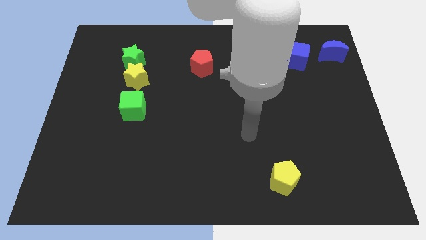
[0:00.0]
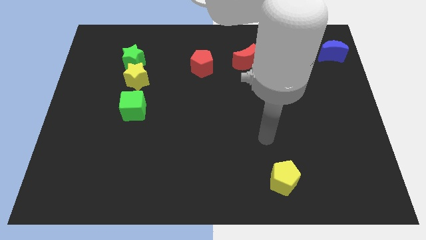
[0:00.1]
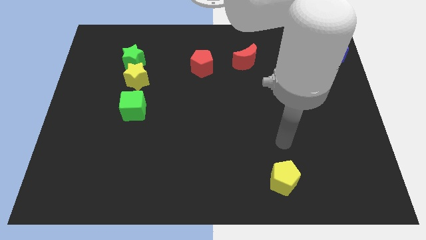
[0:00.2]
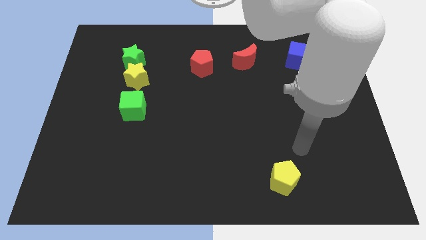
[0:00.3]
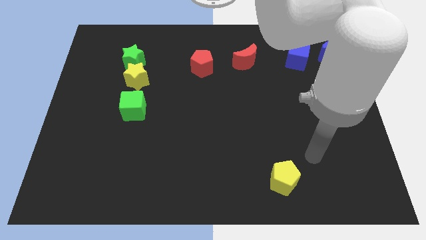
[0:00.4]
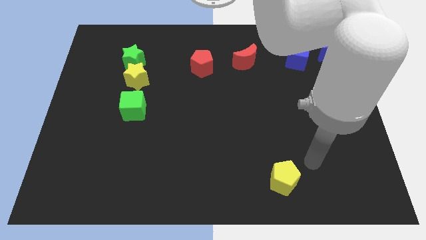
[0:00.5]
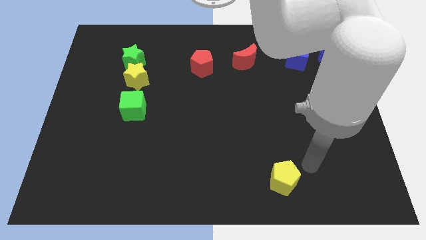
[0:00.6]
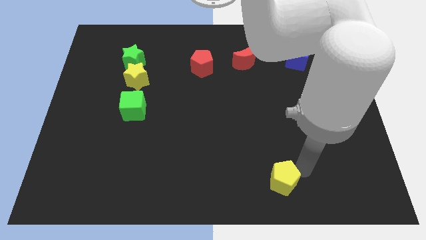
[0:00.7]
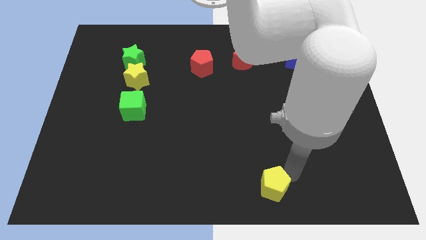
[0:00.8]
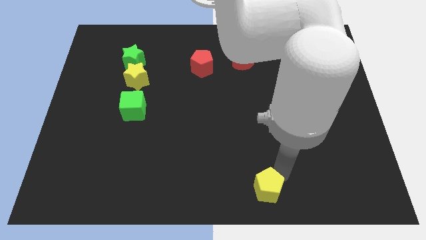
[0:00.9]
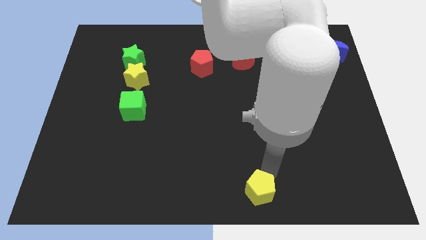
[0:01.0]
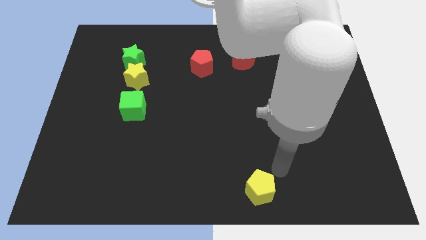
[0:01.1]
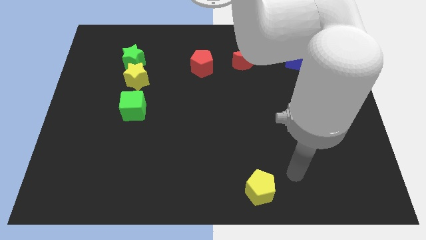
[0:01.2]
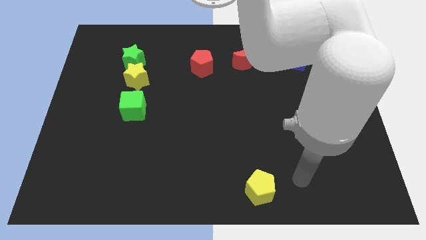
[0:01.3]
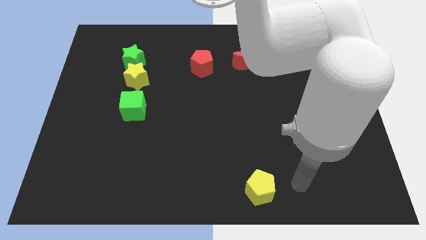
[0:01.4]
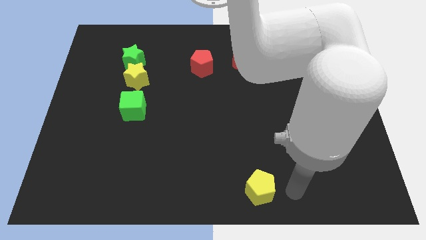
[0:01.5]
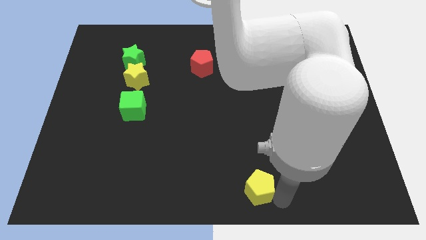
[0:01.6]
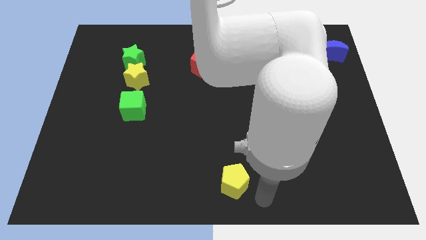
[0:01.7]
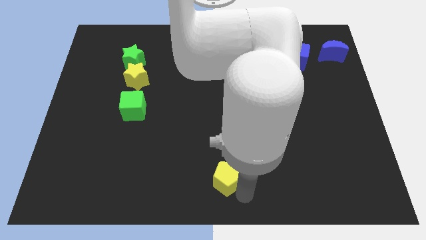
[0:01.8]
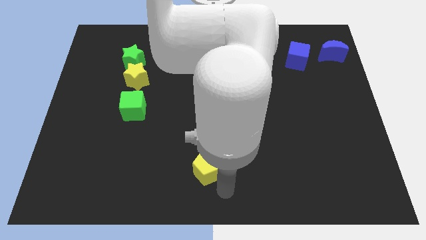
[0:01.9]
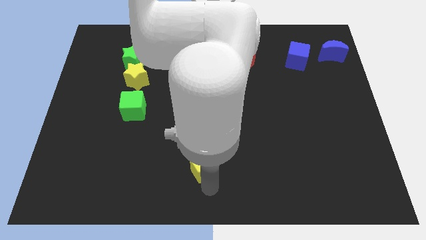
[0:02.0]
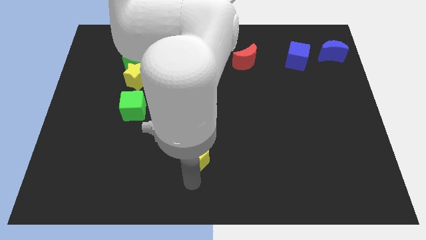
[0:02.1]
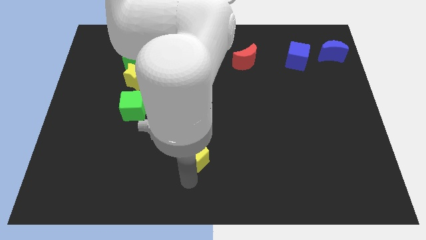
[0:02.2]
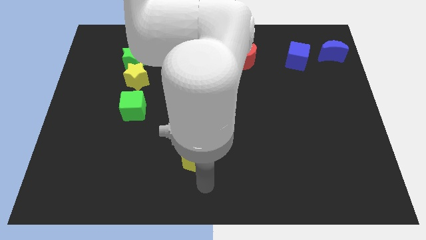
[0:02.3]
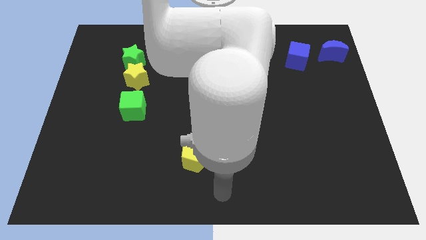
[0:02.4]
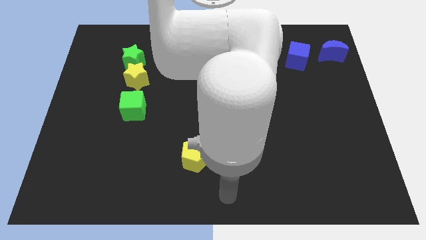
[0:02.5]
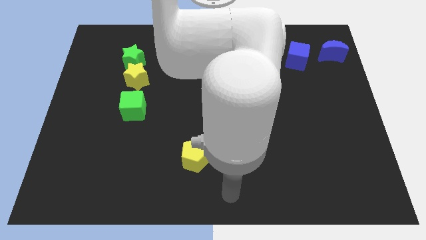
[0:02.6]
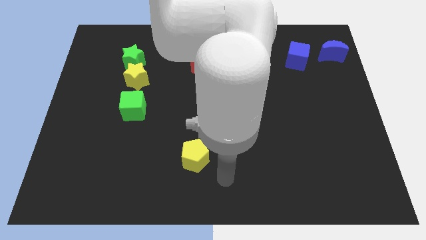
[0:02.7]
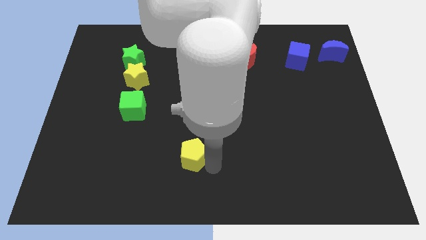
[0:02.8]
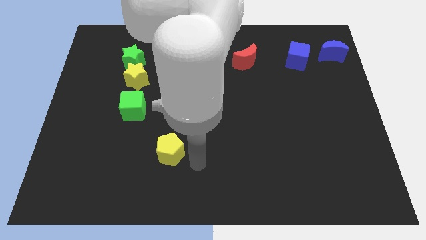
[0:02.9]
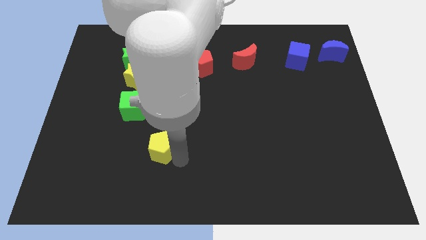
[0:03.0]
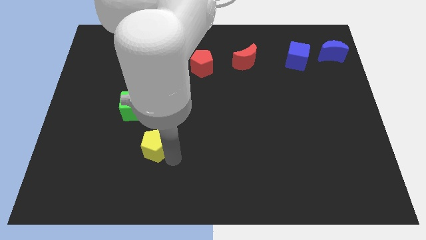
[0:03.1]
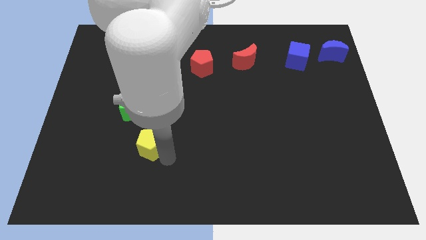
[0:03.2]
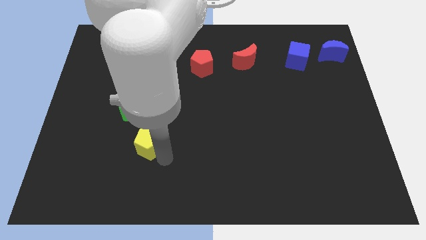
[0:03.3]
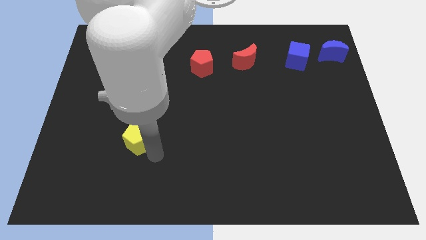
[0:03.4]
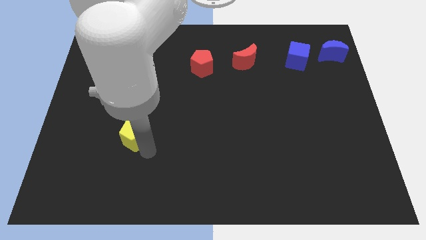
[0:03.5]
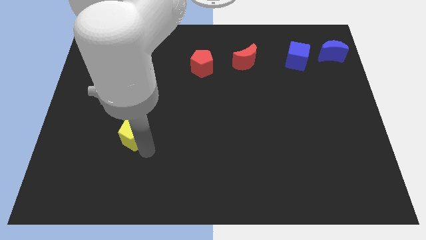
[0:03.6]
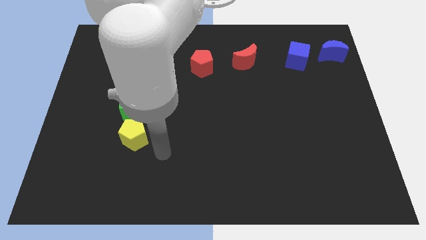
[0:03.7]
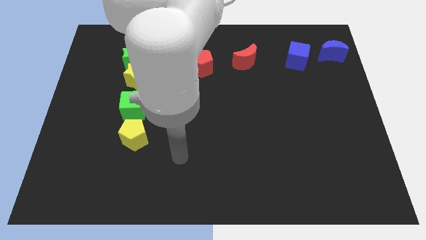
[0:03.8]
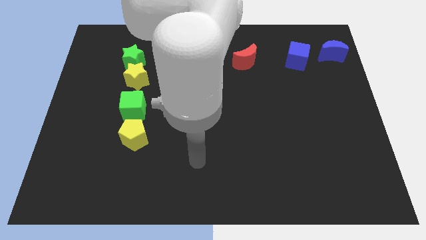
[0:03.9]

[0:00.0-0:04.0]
add the yellow pentagon to the down side of the green square

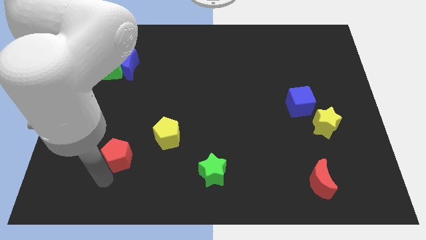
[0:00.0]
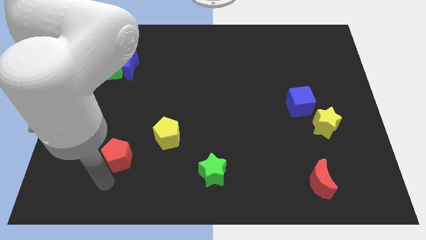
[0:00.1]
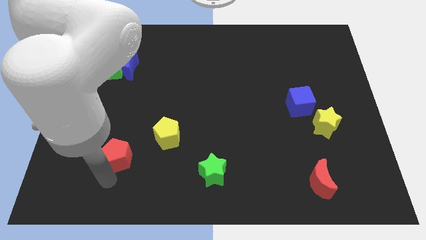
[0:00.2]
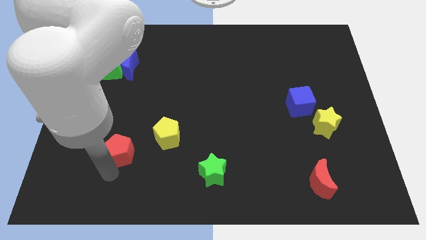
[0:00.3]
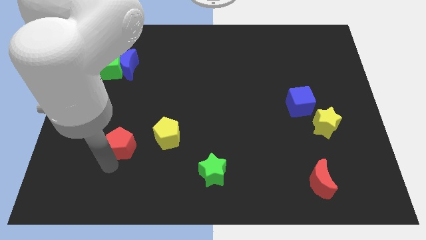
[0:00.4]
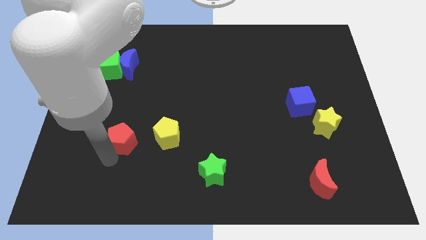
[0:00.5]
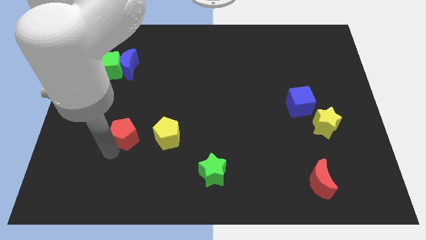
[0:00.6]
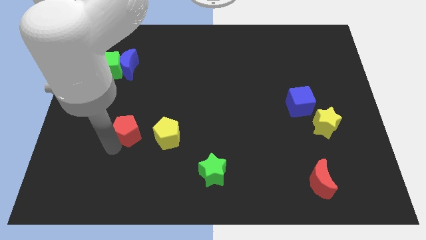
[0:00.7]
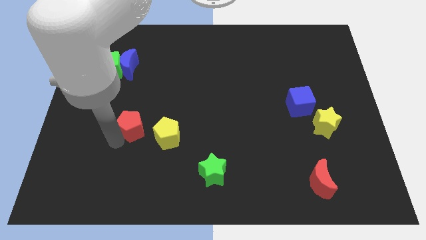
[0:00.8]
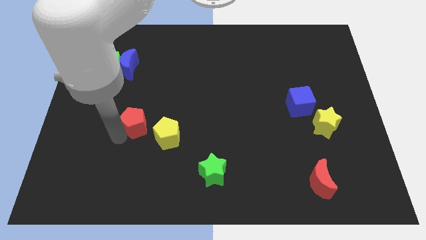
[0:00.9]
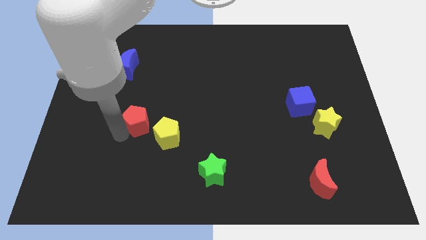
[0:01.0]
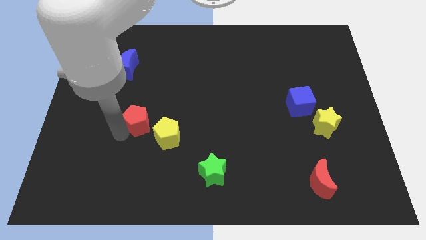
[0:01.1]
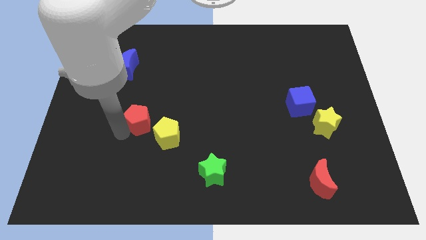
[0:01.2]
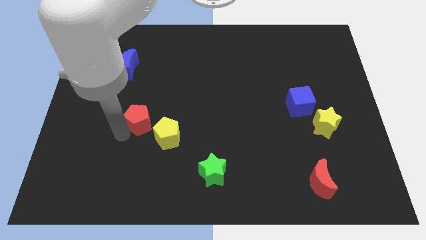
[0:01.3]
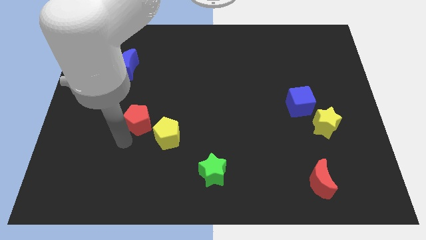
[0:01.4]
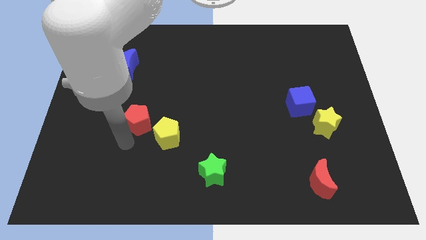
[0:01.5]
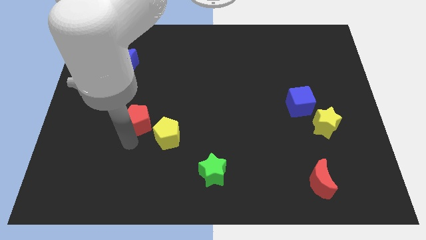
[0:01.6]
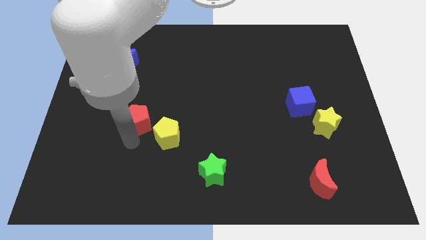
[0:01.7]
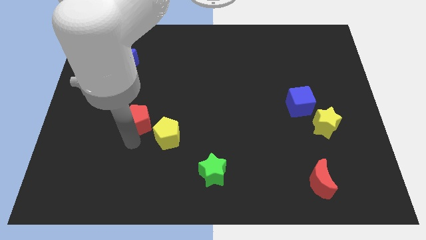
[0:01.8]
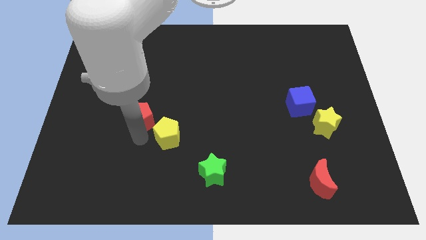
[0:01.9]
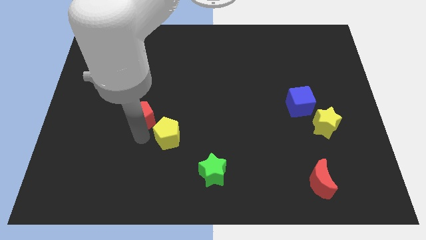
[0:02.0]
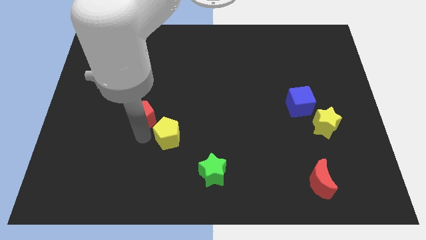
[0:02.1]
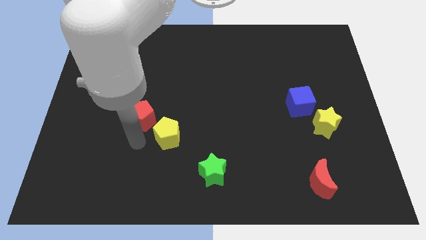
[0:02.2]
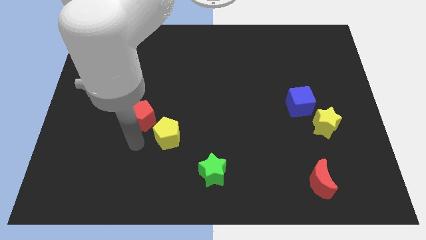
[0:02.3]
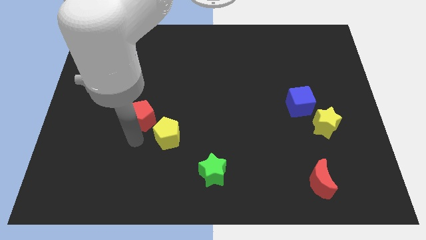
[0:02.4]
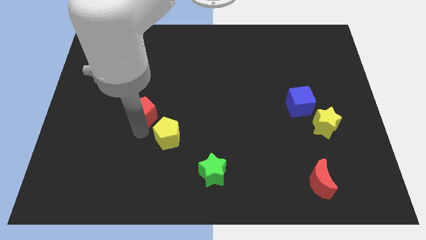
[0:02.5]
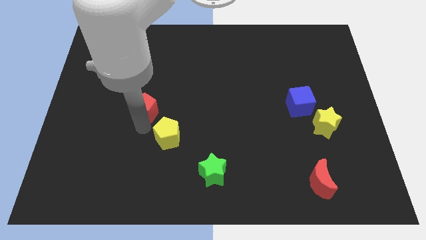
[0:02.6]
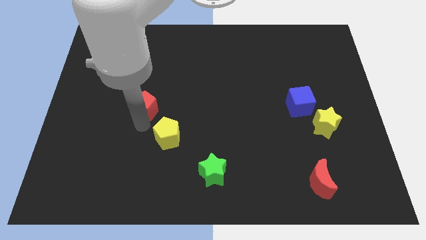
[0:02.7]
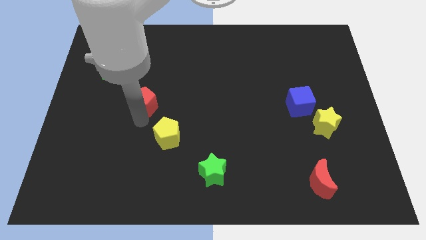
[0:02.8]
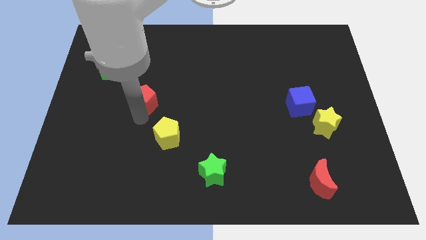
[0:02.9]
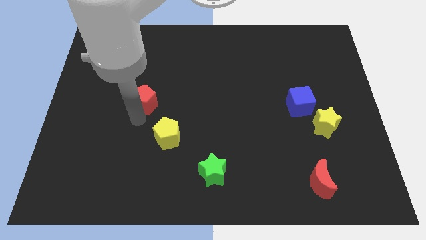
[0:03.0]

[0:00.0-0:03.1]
move the red pentagon in between blue crescent and yellow pentagon

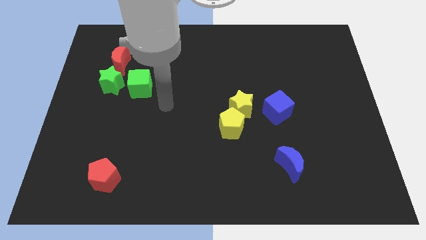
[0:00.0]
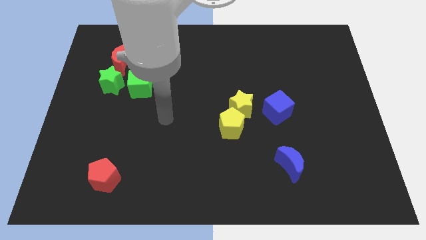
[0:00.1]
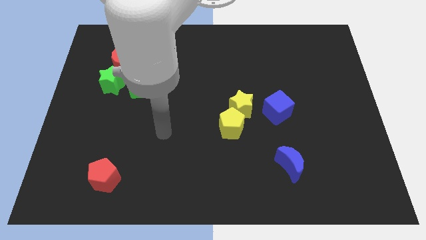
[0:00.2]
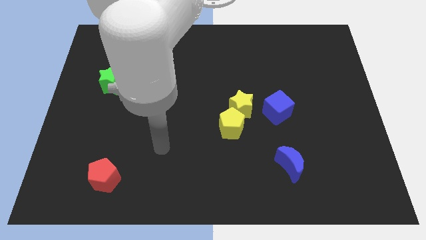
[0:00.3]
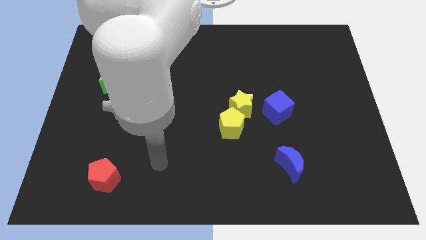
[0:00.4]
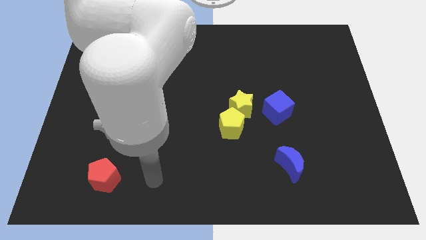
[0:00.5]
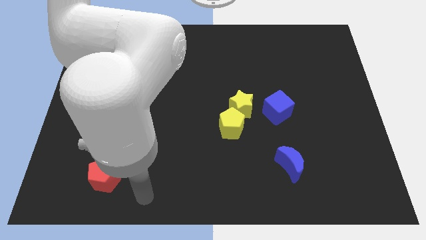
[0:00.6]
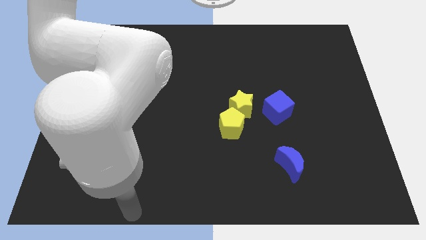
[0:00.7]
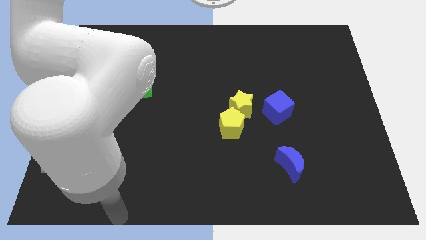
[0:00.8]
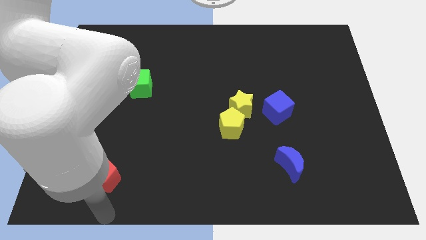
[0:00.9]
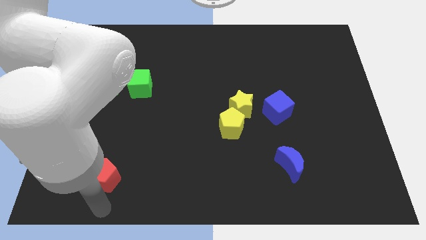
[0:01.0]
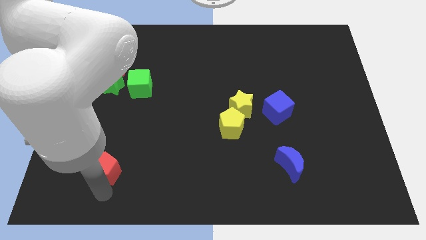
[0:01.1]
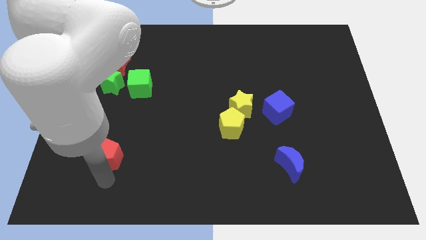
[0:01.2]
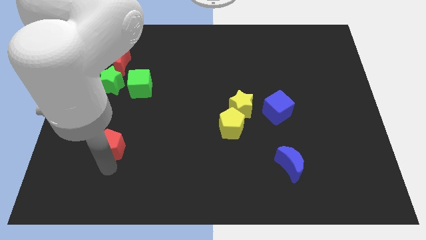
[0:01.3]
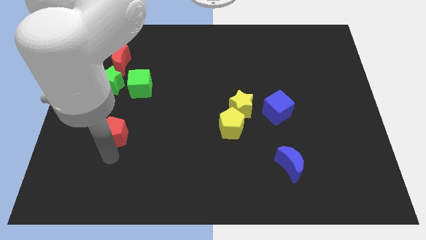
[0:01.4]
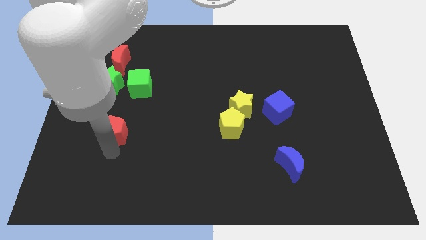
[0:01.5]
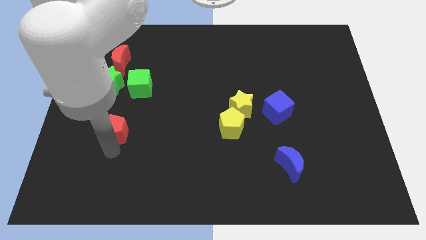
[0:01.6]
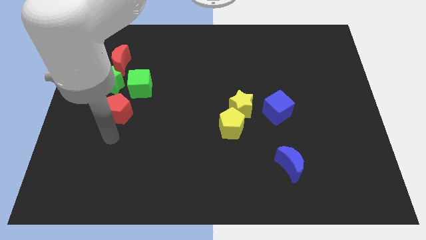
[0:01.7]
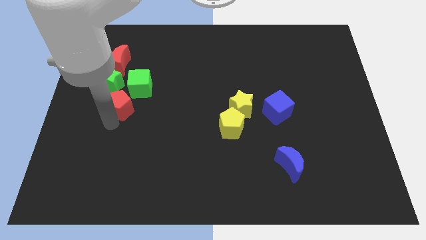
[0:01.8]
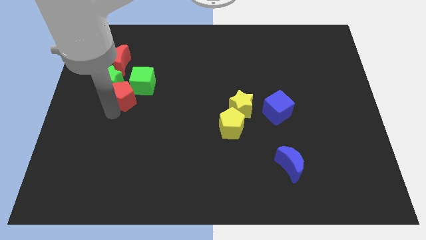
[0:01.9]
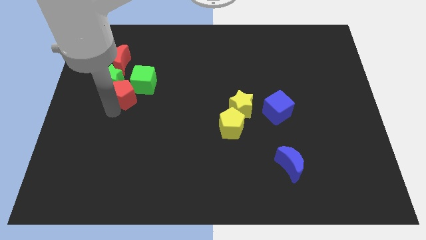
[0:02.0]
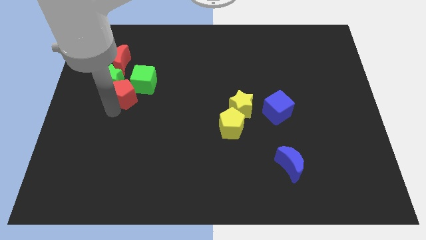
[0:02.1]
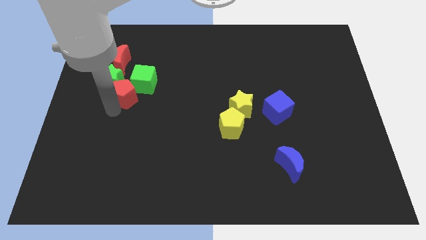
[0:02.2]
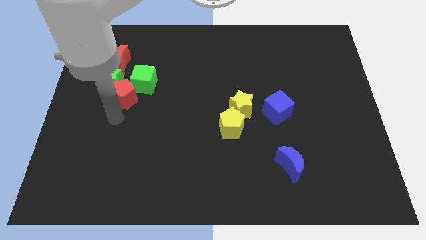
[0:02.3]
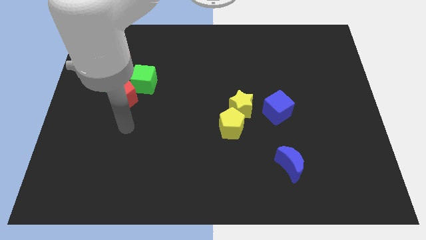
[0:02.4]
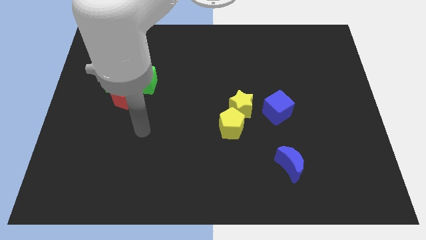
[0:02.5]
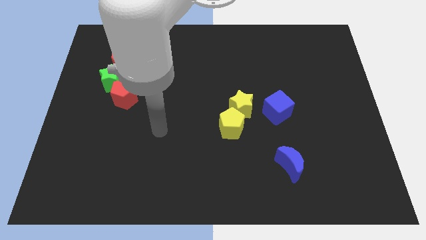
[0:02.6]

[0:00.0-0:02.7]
push the red pentagon into the group of blocks
